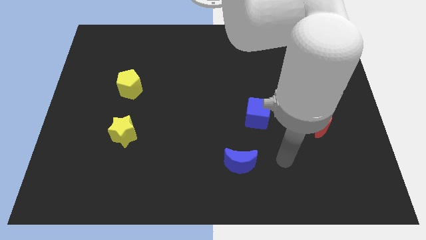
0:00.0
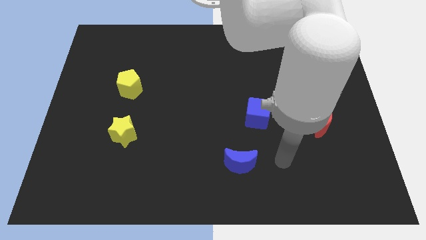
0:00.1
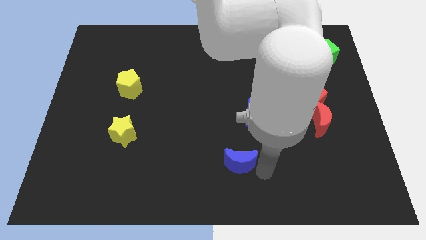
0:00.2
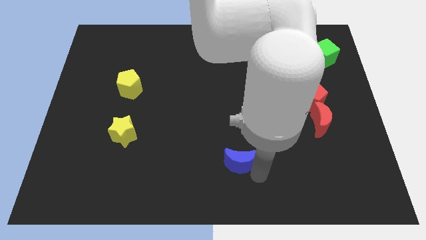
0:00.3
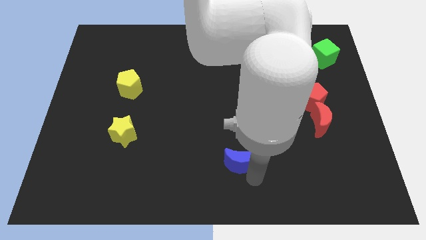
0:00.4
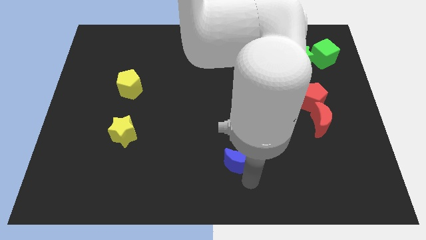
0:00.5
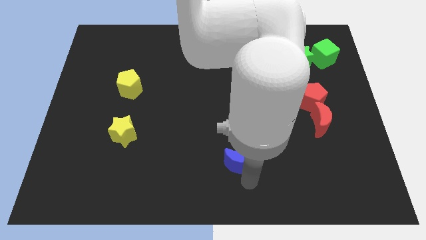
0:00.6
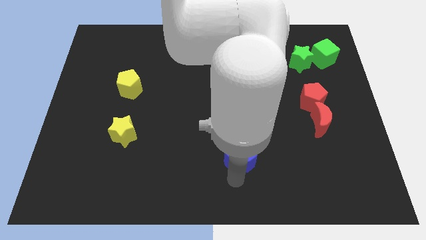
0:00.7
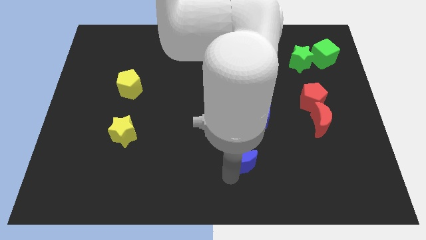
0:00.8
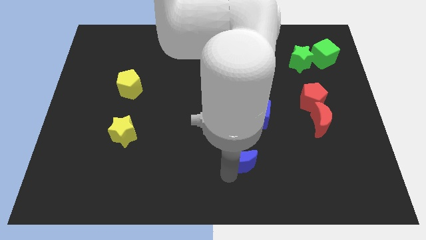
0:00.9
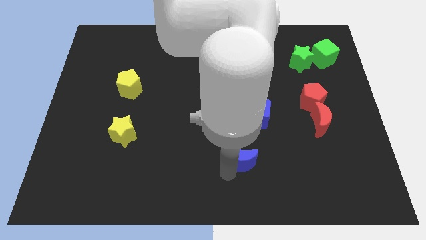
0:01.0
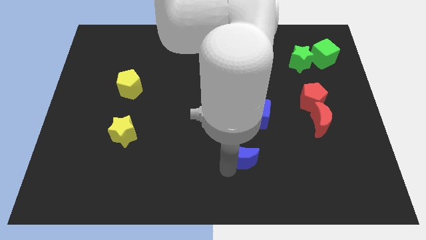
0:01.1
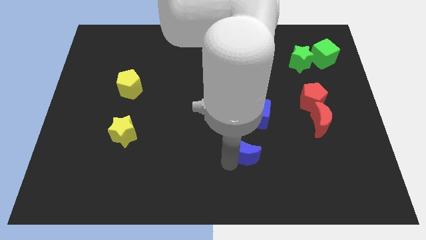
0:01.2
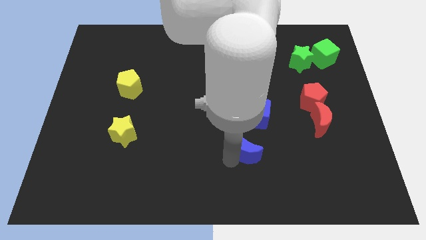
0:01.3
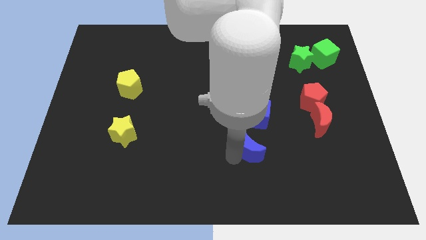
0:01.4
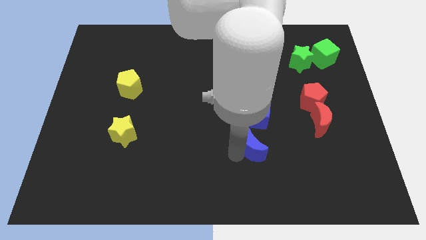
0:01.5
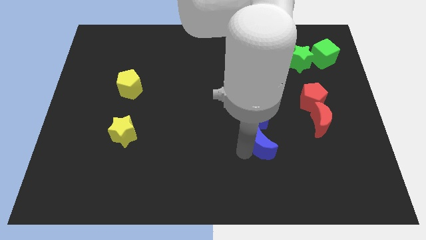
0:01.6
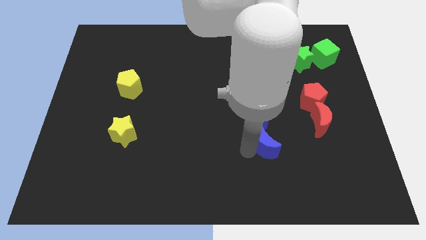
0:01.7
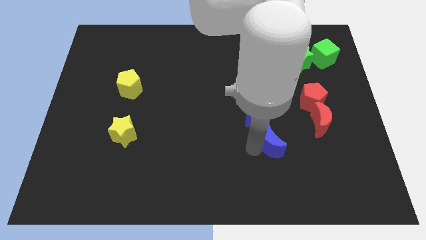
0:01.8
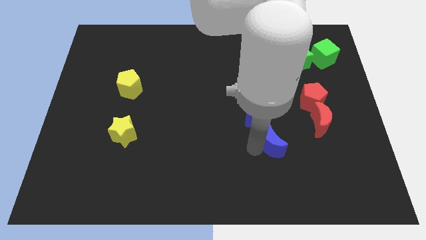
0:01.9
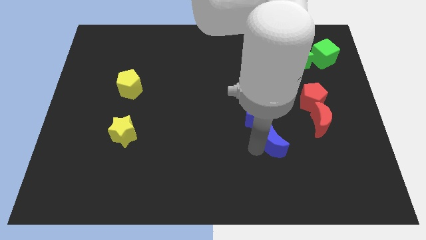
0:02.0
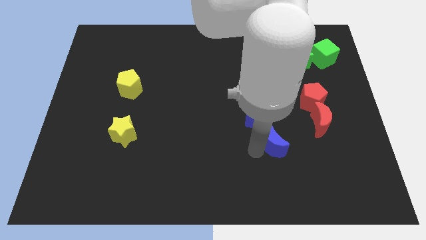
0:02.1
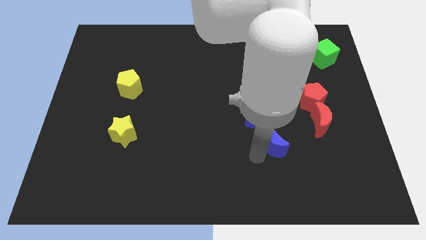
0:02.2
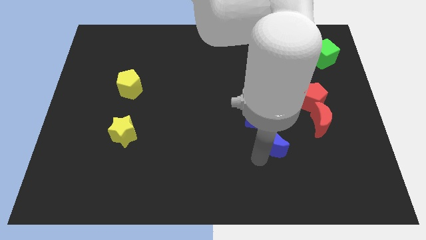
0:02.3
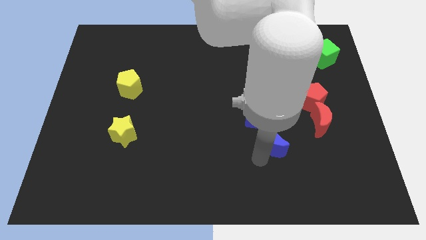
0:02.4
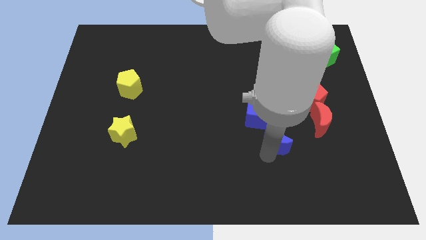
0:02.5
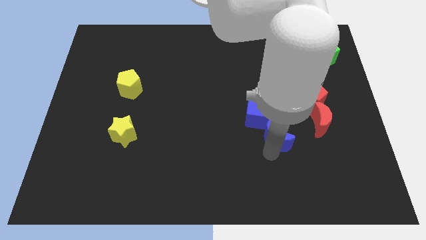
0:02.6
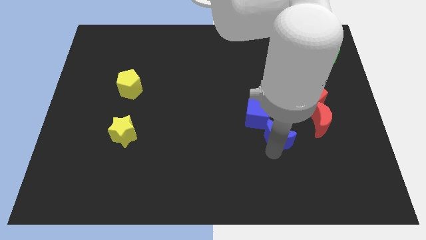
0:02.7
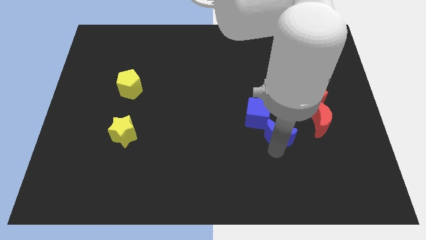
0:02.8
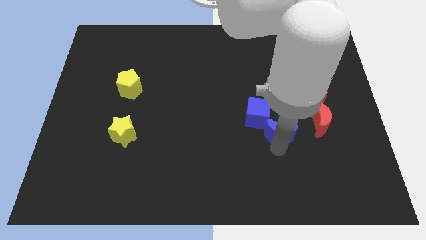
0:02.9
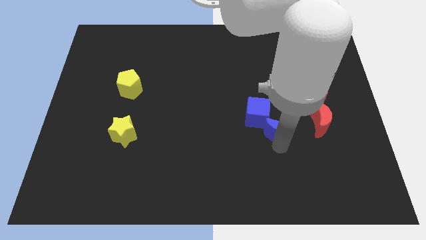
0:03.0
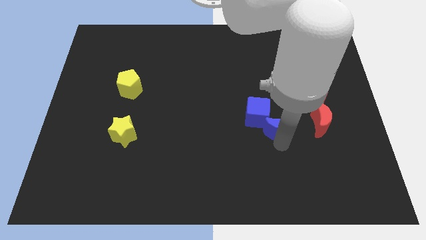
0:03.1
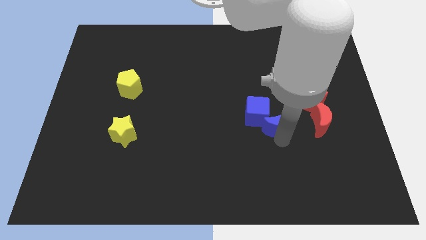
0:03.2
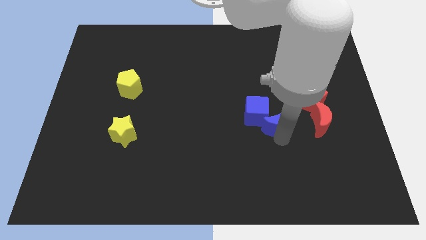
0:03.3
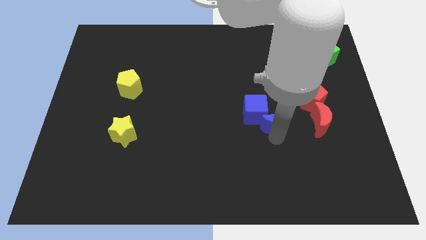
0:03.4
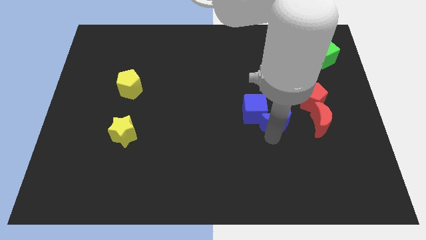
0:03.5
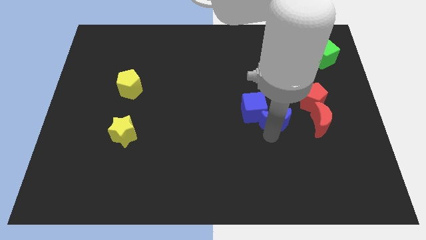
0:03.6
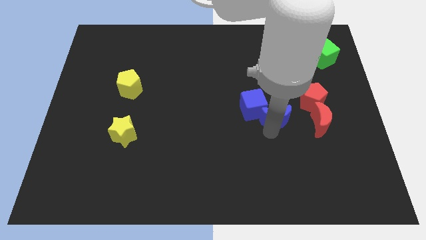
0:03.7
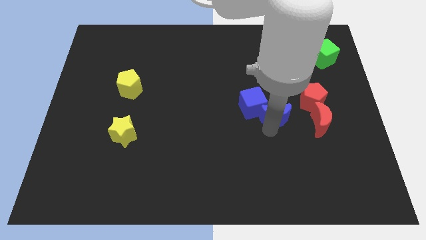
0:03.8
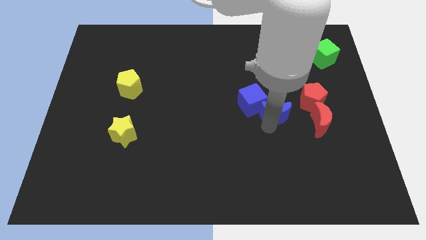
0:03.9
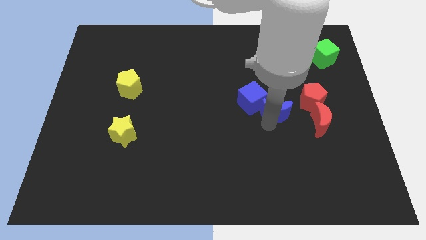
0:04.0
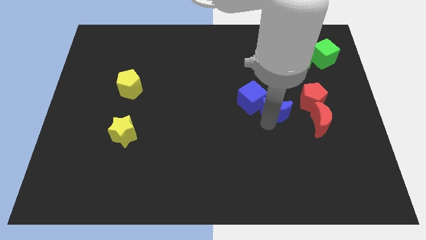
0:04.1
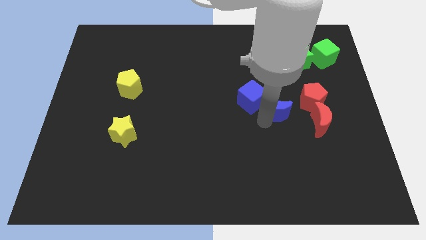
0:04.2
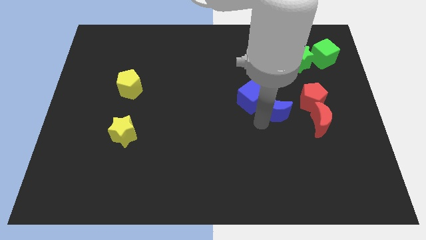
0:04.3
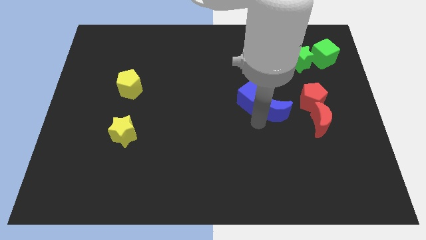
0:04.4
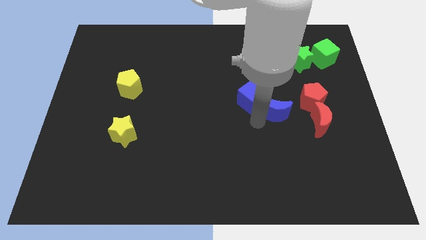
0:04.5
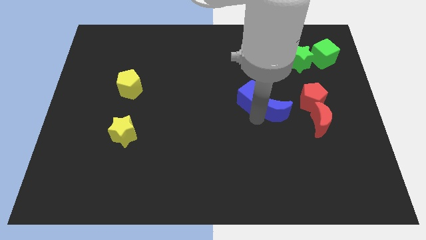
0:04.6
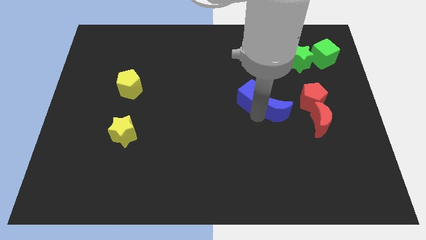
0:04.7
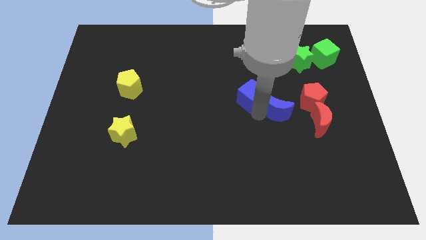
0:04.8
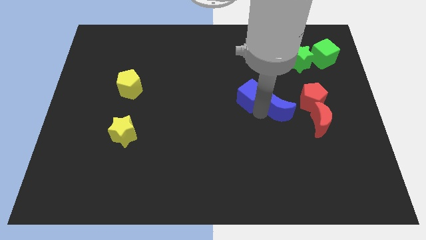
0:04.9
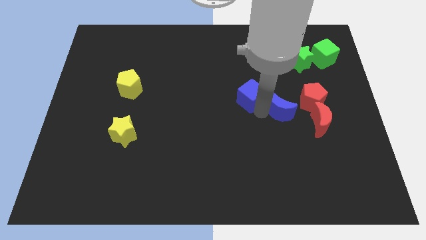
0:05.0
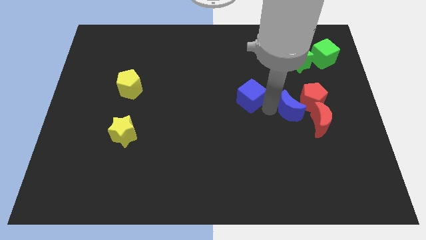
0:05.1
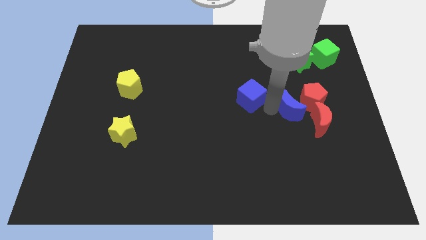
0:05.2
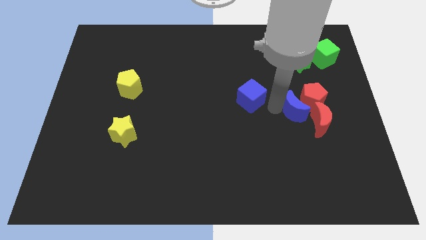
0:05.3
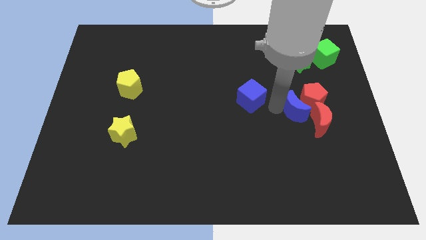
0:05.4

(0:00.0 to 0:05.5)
move the blue moon next to the red pentagon

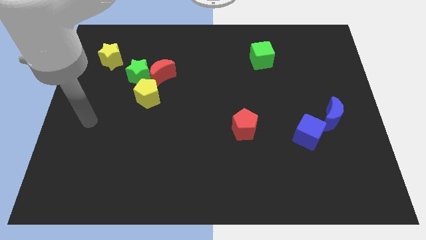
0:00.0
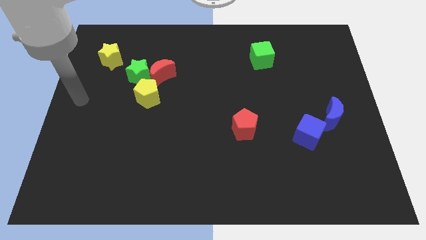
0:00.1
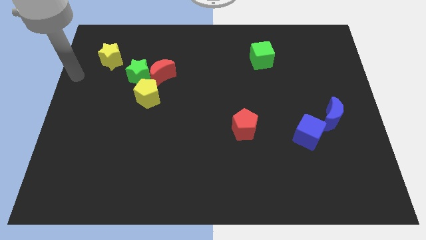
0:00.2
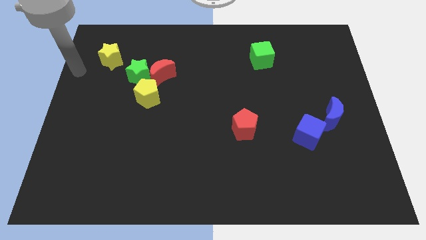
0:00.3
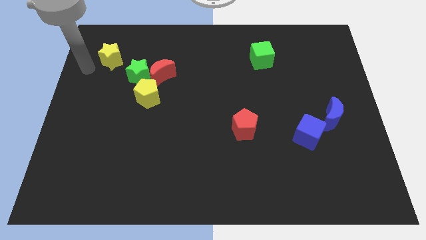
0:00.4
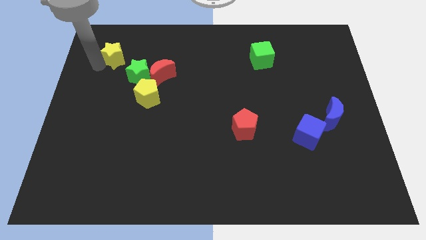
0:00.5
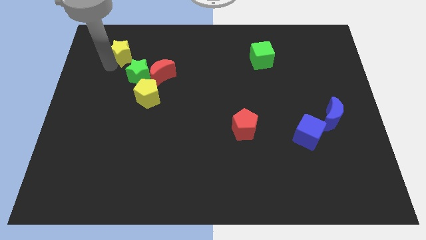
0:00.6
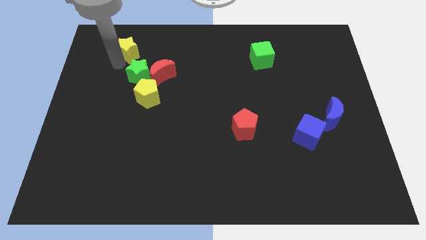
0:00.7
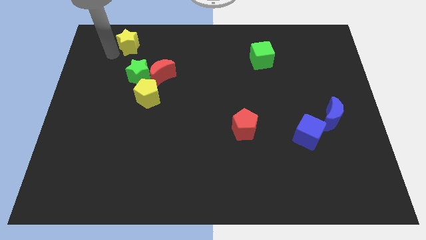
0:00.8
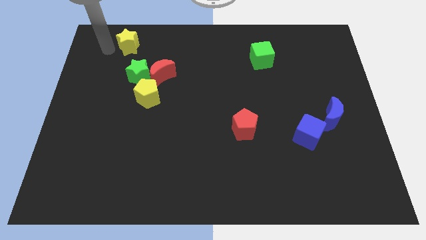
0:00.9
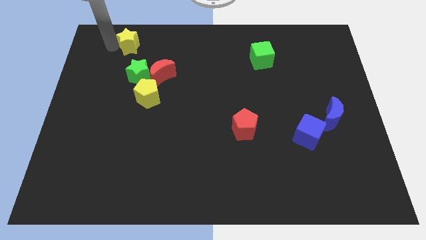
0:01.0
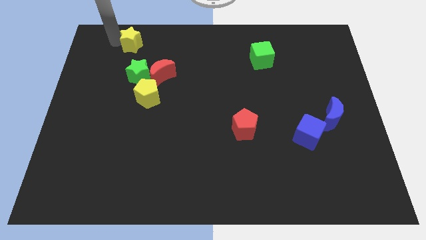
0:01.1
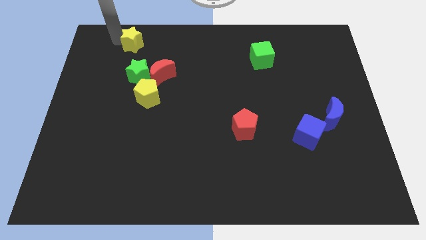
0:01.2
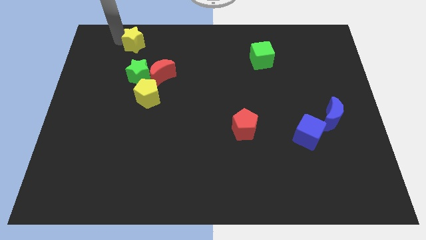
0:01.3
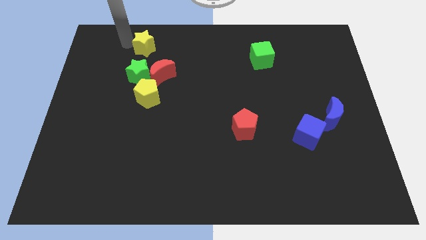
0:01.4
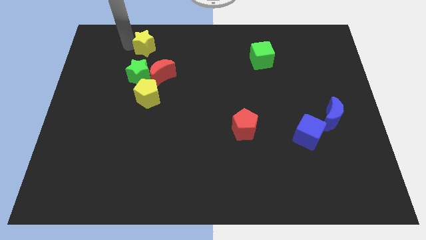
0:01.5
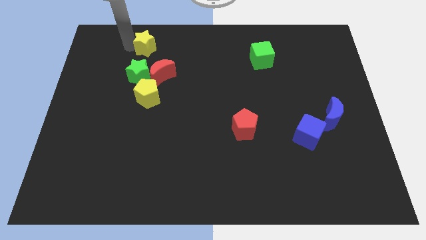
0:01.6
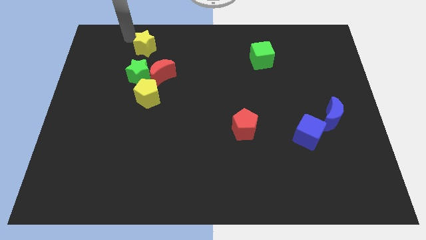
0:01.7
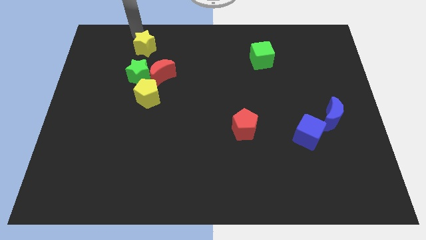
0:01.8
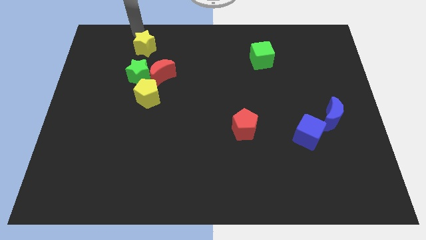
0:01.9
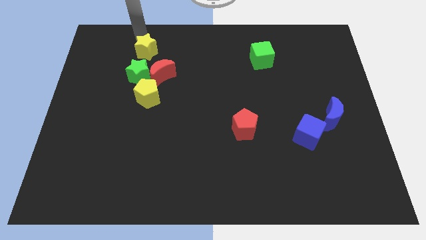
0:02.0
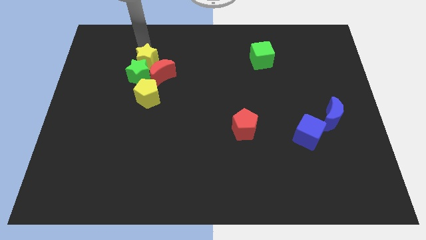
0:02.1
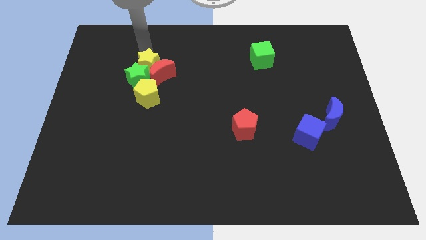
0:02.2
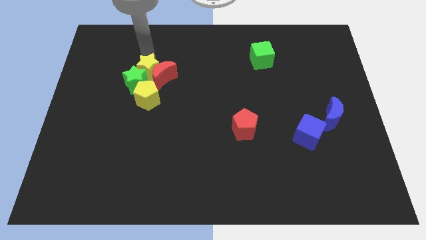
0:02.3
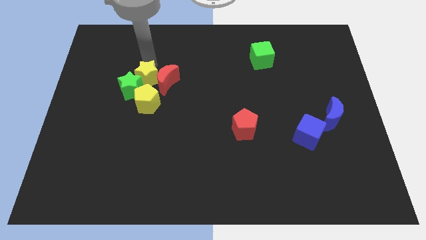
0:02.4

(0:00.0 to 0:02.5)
put the yellow star to the red moon

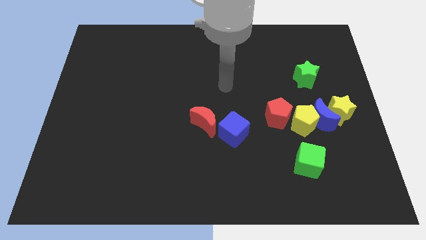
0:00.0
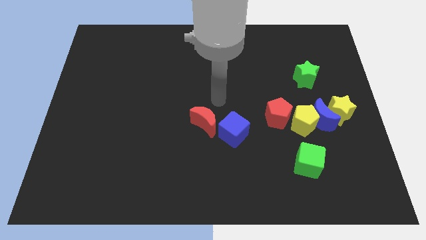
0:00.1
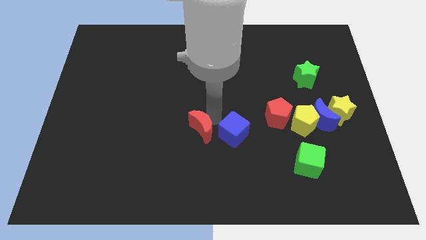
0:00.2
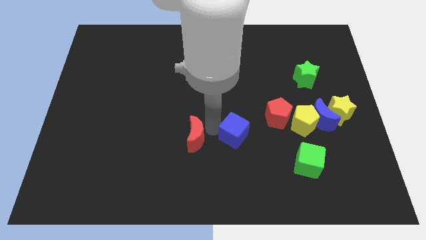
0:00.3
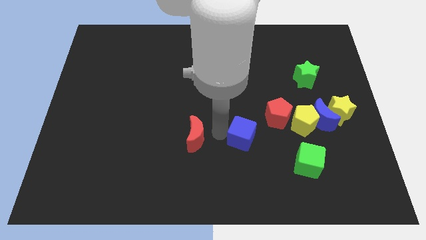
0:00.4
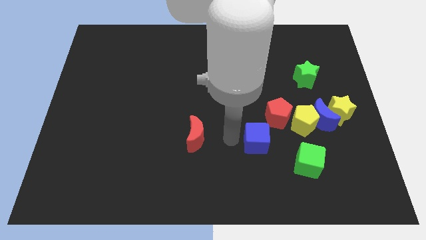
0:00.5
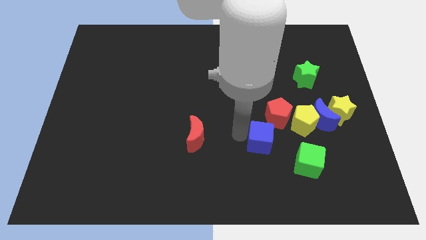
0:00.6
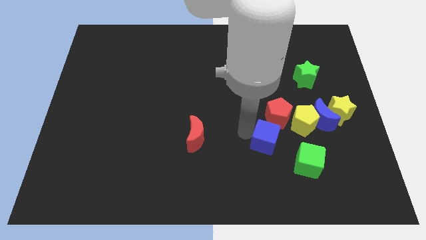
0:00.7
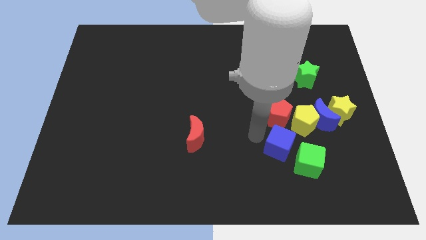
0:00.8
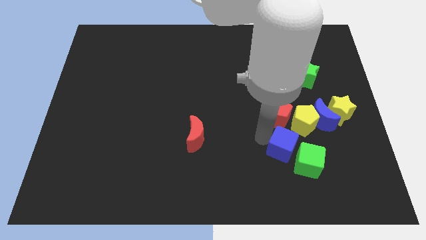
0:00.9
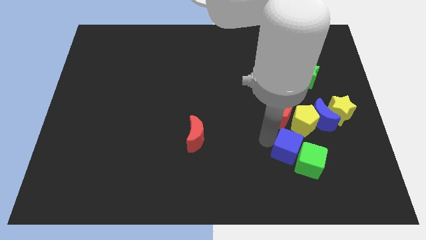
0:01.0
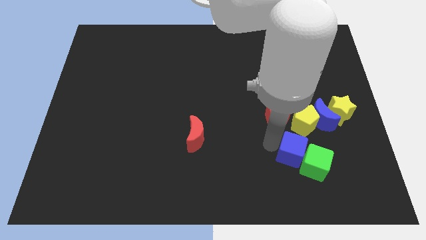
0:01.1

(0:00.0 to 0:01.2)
move the blue cube to the green cube
